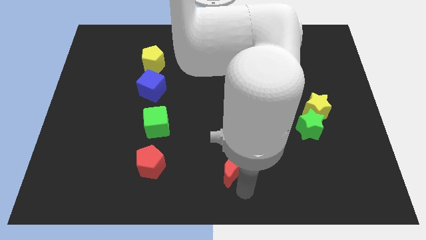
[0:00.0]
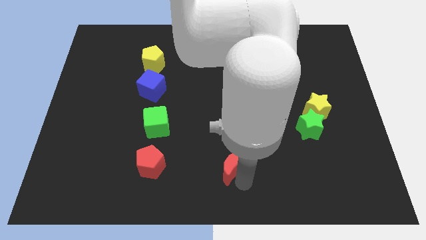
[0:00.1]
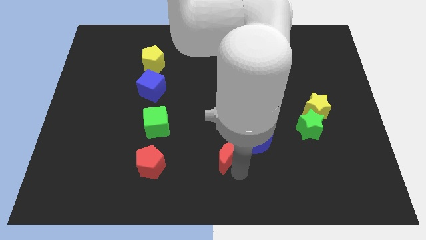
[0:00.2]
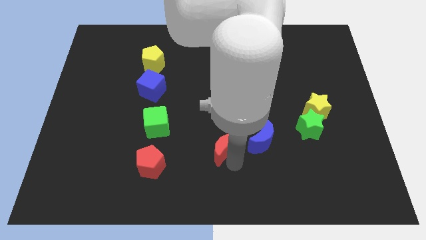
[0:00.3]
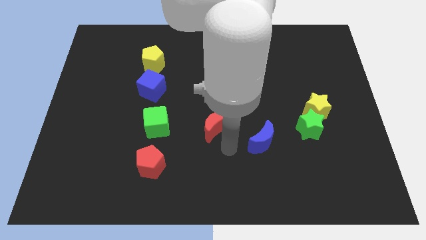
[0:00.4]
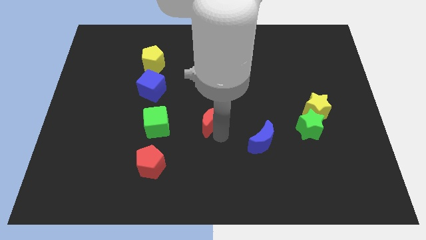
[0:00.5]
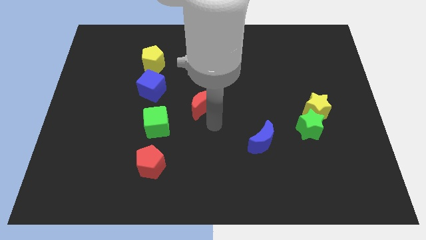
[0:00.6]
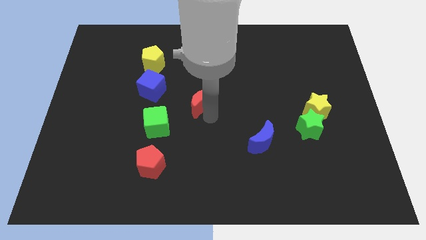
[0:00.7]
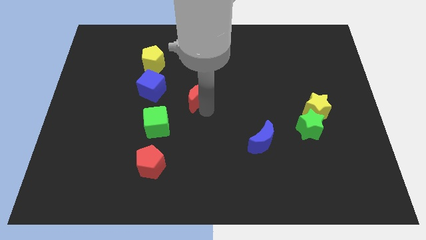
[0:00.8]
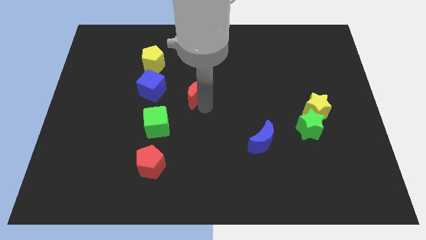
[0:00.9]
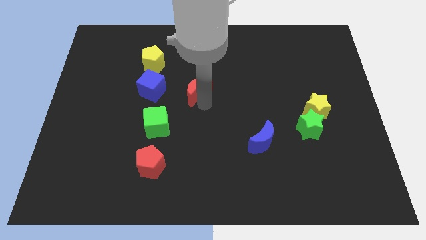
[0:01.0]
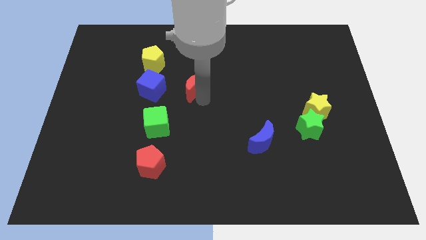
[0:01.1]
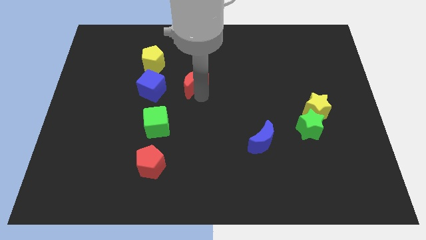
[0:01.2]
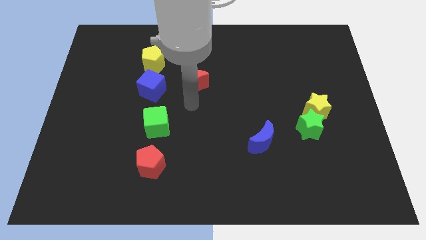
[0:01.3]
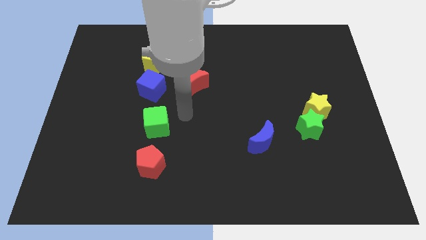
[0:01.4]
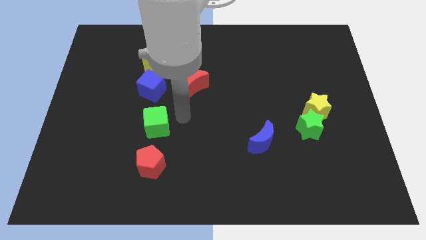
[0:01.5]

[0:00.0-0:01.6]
slide the red moon to the right of the blue cube

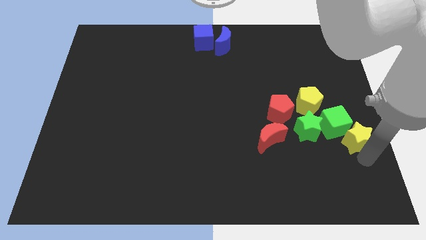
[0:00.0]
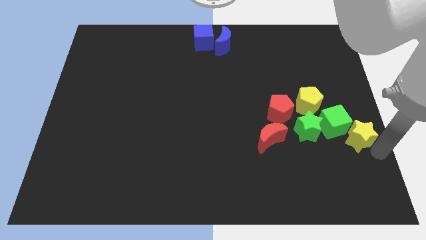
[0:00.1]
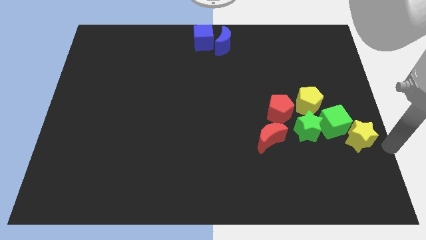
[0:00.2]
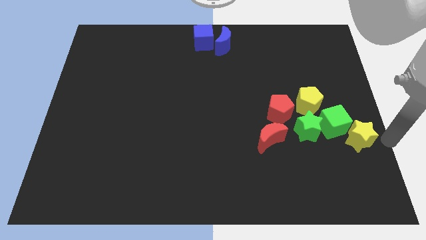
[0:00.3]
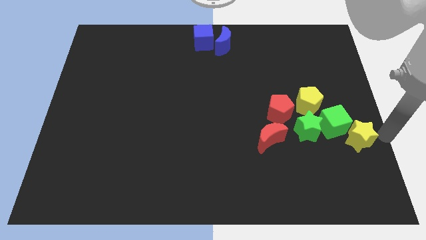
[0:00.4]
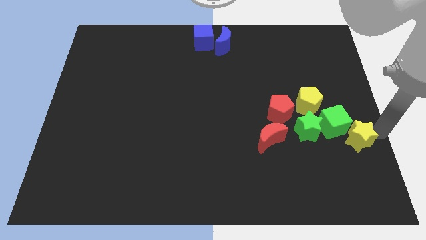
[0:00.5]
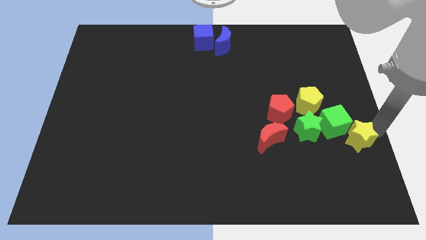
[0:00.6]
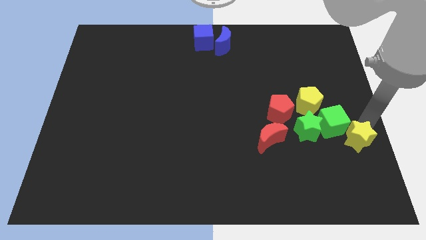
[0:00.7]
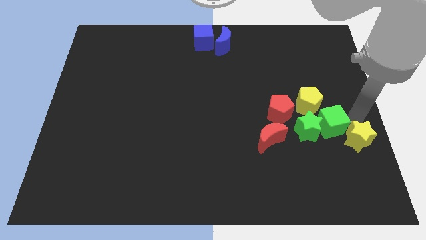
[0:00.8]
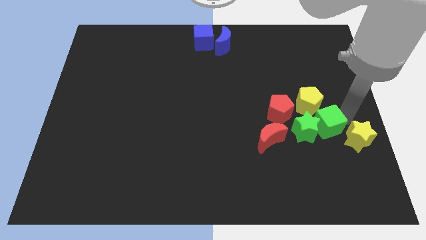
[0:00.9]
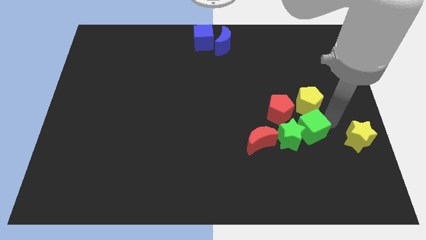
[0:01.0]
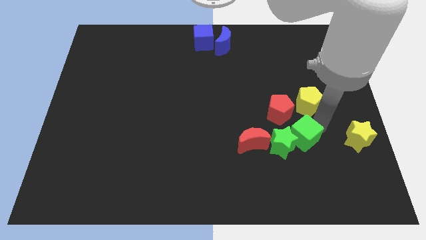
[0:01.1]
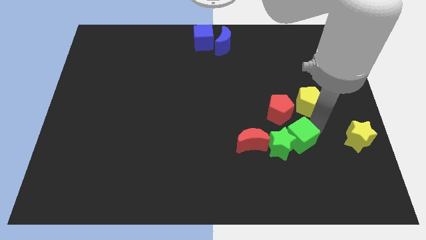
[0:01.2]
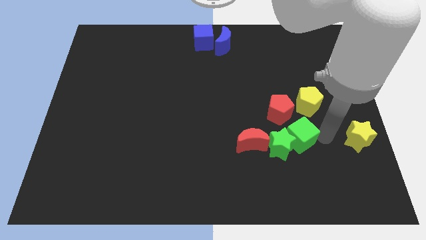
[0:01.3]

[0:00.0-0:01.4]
push the green blocks into the red crescent

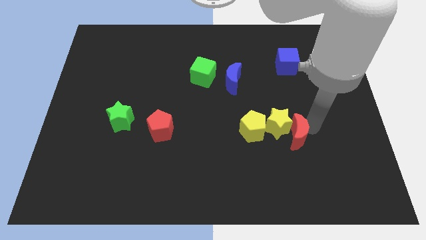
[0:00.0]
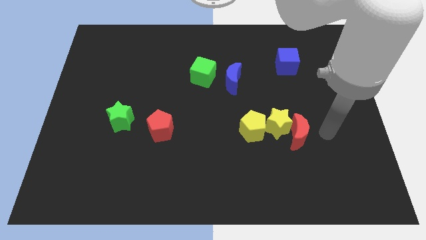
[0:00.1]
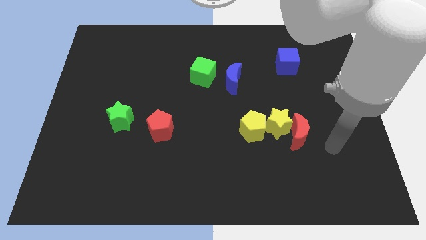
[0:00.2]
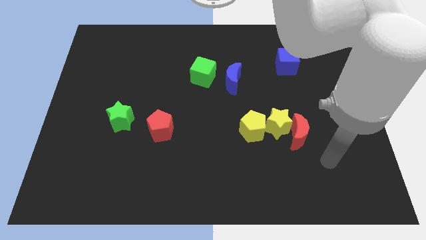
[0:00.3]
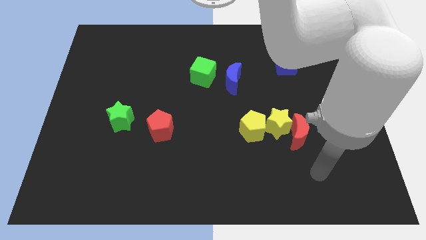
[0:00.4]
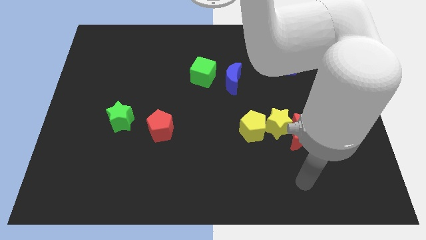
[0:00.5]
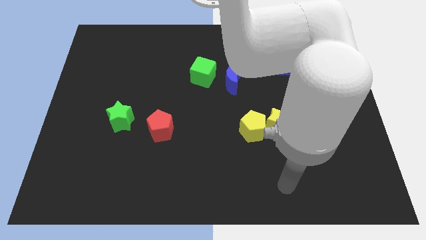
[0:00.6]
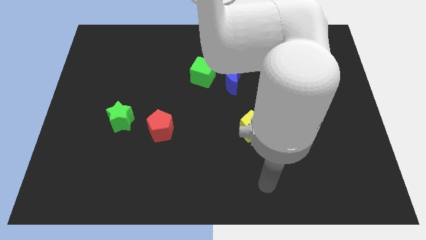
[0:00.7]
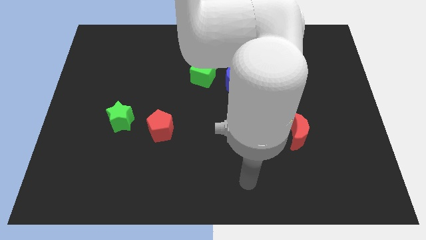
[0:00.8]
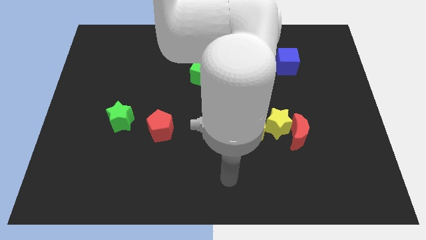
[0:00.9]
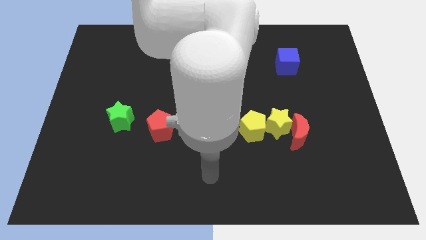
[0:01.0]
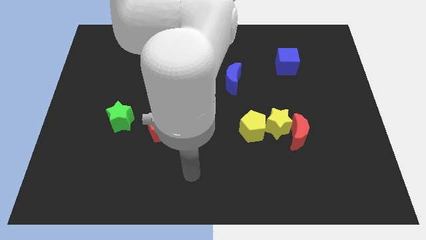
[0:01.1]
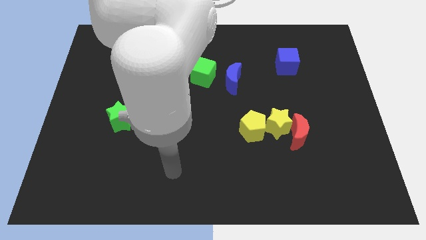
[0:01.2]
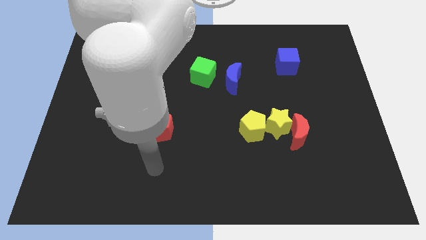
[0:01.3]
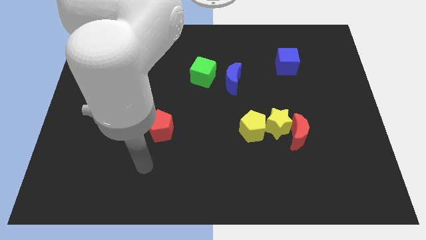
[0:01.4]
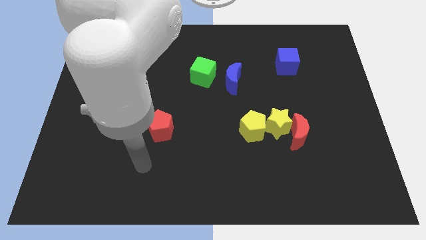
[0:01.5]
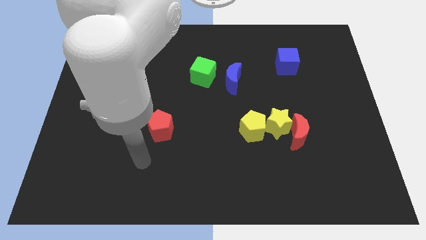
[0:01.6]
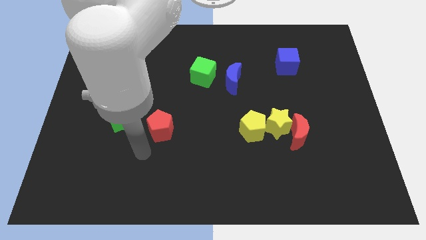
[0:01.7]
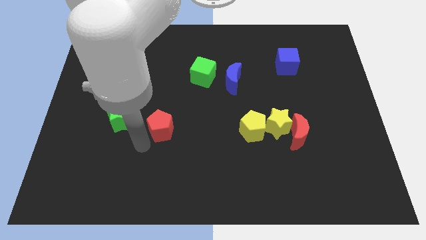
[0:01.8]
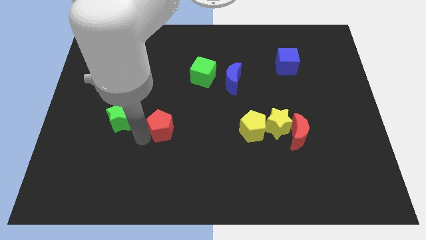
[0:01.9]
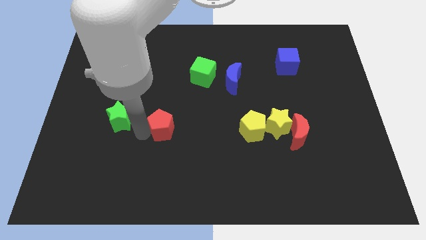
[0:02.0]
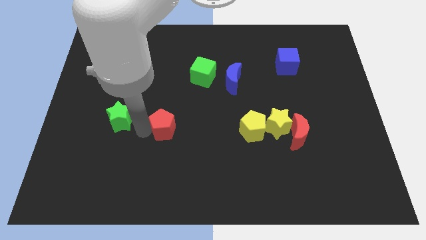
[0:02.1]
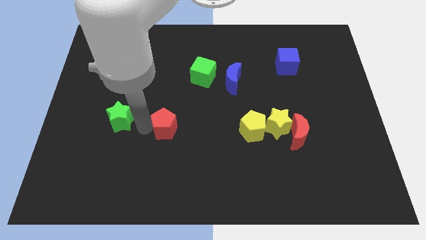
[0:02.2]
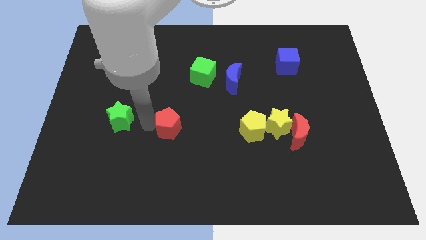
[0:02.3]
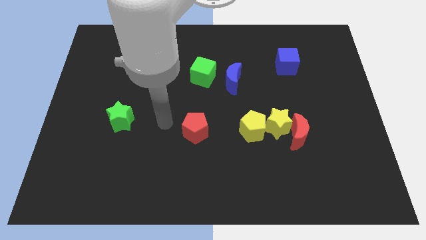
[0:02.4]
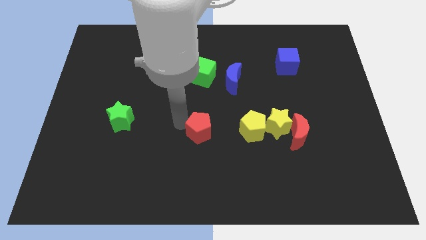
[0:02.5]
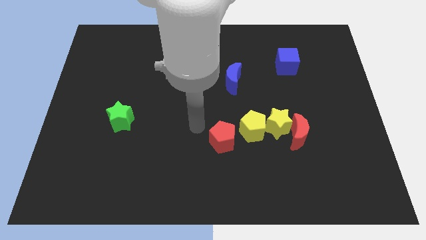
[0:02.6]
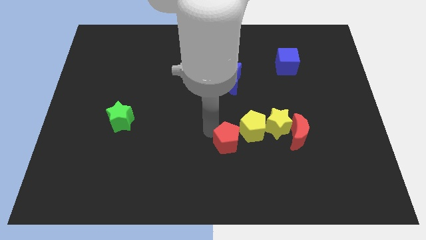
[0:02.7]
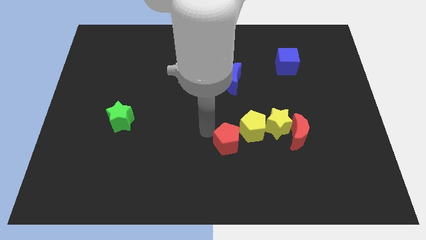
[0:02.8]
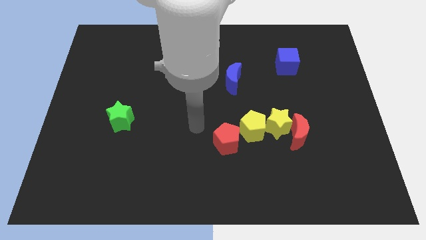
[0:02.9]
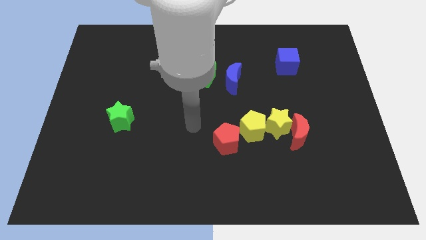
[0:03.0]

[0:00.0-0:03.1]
push the red pentagon closer to the yellow pentagon

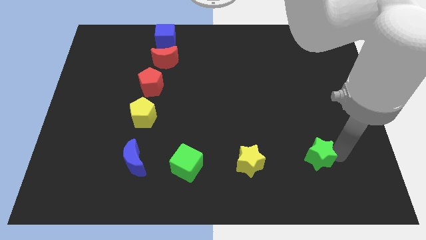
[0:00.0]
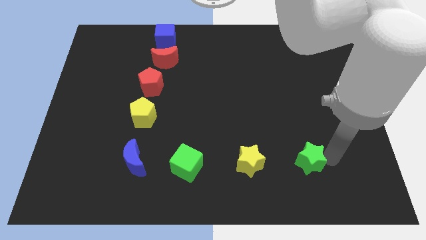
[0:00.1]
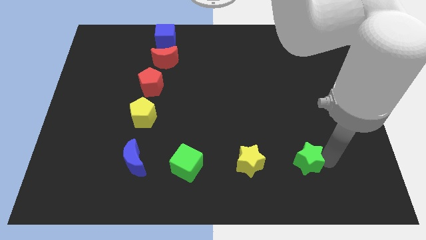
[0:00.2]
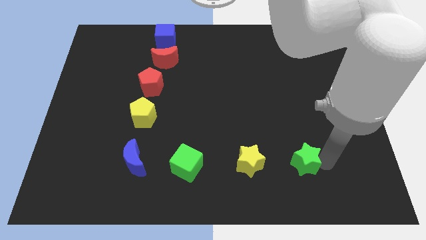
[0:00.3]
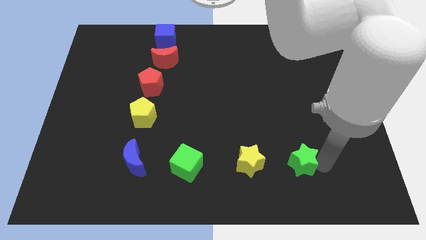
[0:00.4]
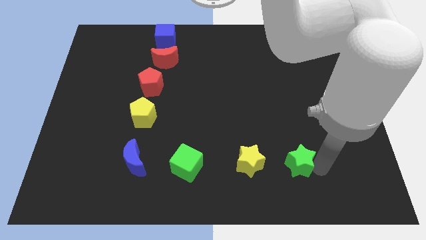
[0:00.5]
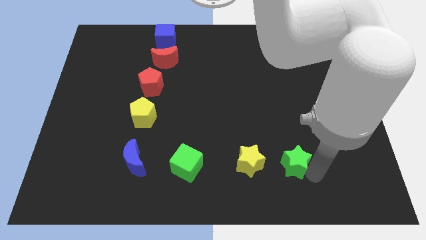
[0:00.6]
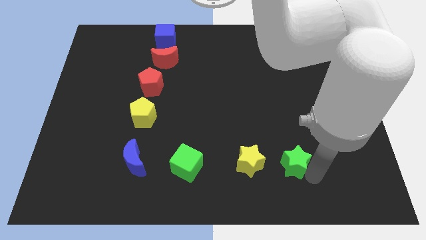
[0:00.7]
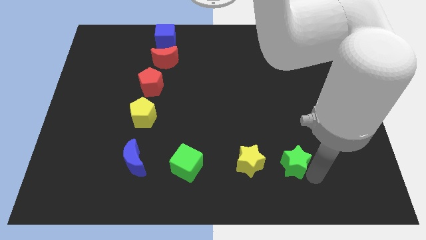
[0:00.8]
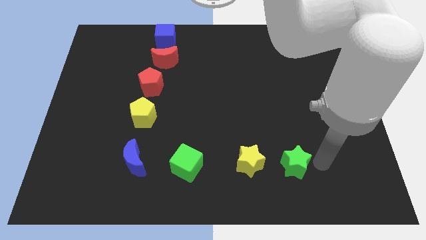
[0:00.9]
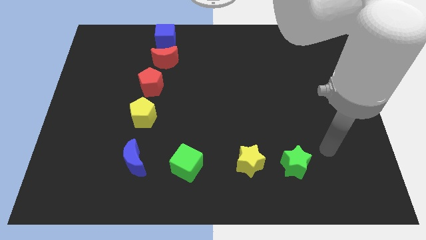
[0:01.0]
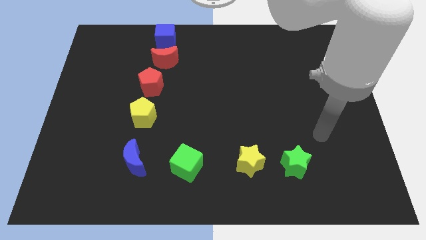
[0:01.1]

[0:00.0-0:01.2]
push the green star to the right side of the yellow star

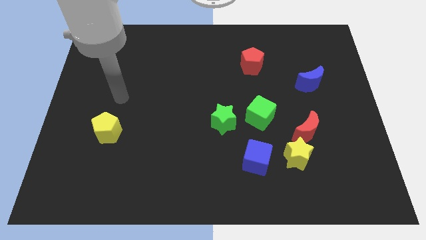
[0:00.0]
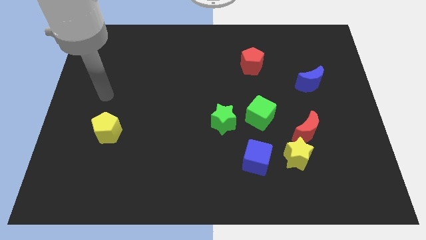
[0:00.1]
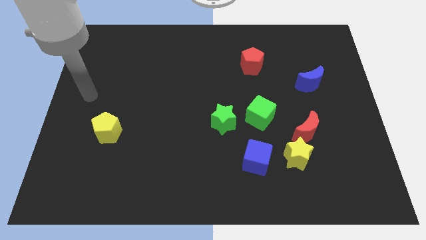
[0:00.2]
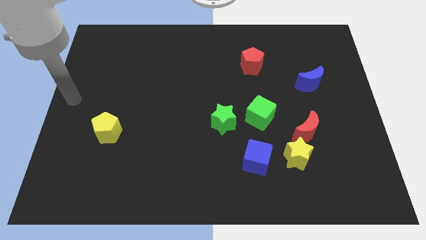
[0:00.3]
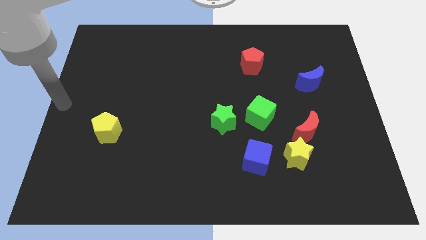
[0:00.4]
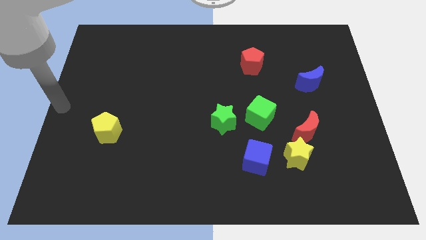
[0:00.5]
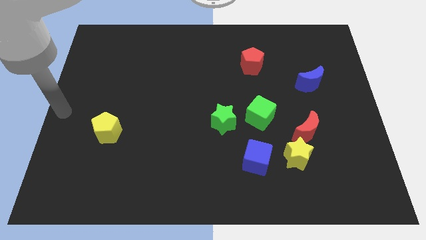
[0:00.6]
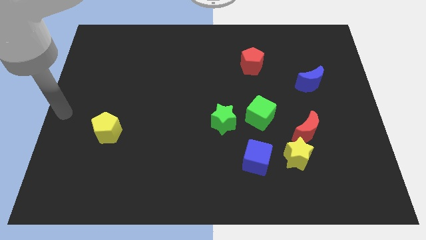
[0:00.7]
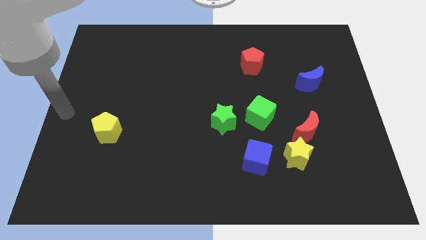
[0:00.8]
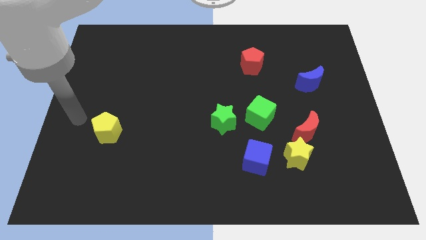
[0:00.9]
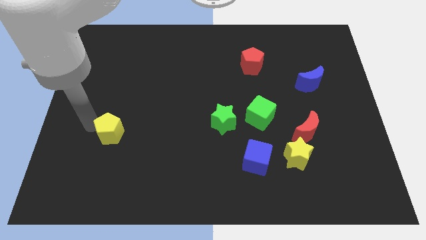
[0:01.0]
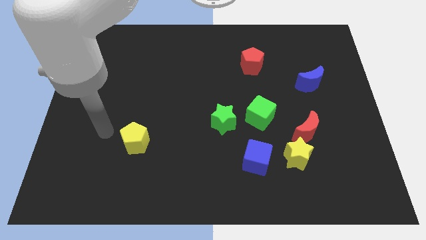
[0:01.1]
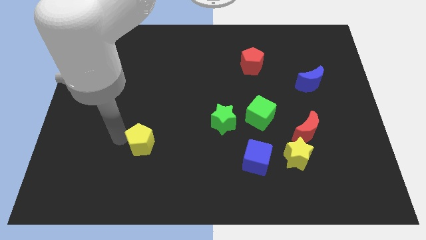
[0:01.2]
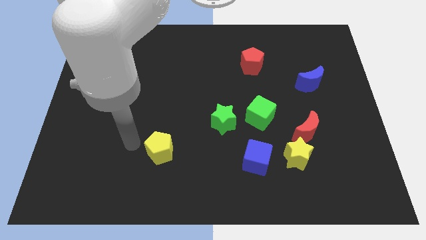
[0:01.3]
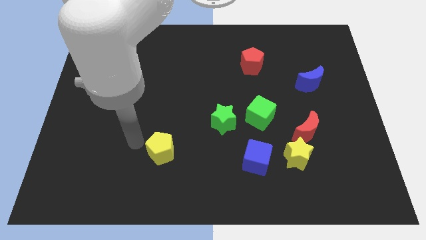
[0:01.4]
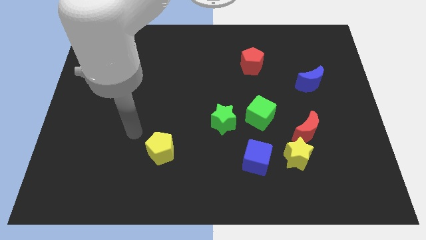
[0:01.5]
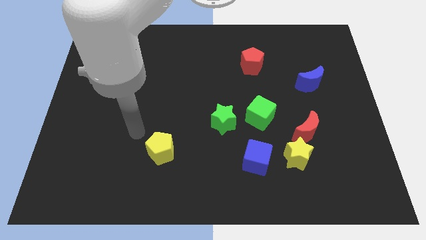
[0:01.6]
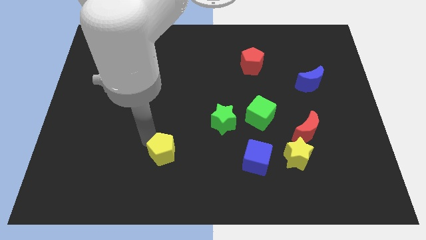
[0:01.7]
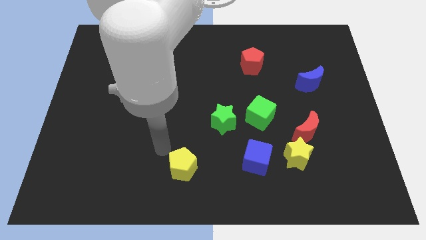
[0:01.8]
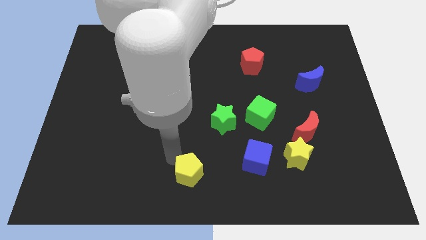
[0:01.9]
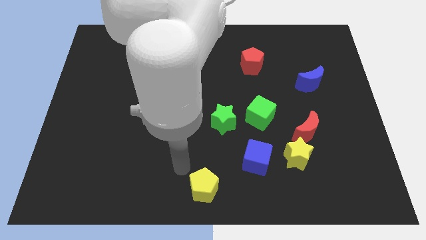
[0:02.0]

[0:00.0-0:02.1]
push the yellow pentagon at the bottom center of the board
